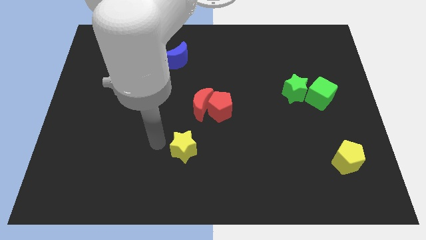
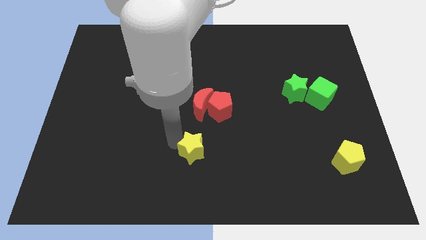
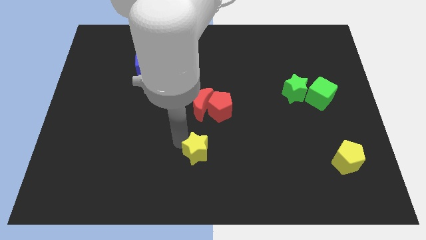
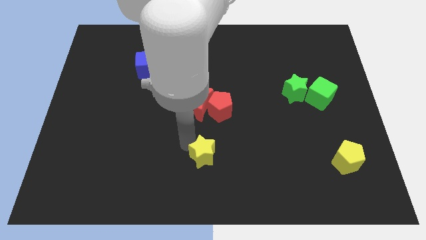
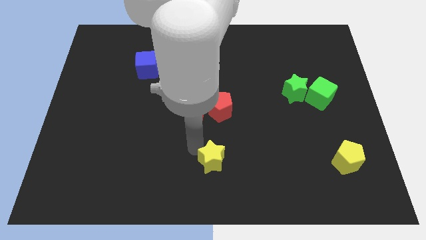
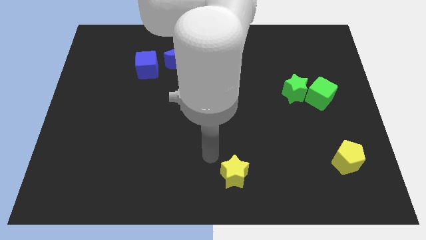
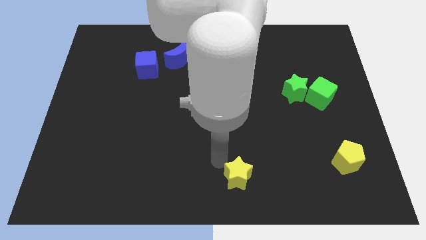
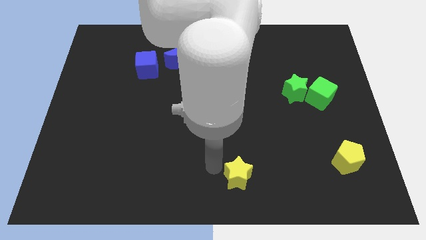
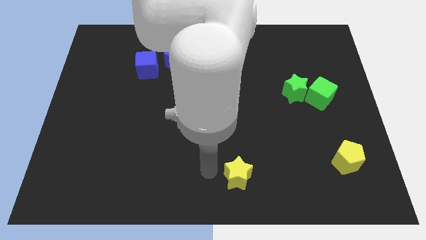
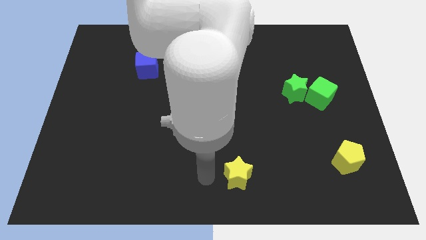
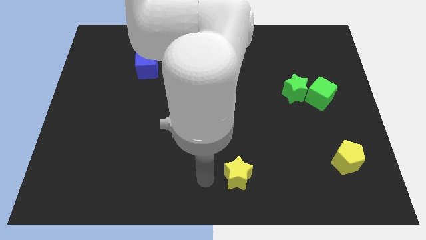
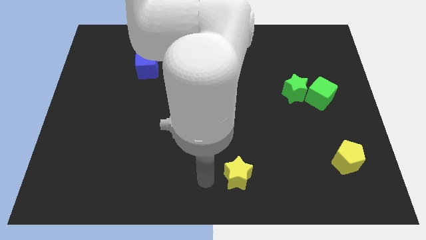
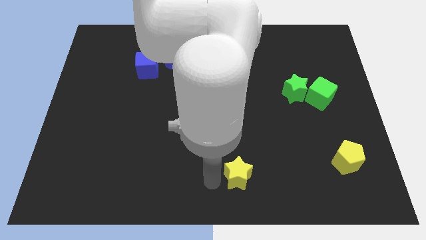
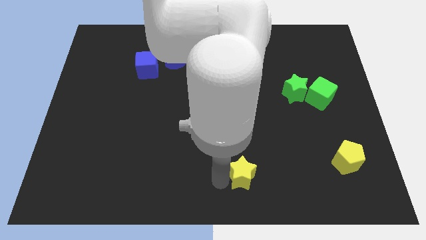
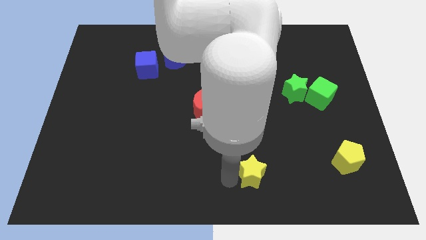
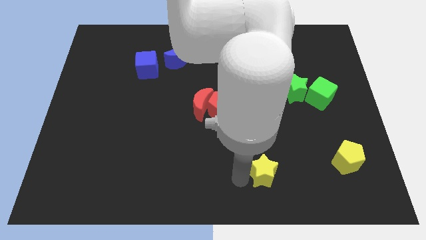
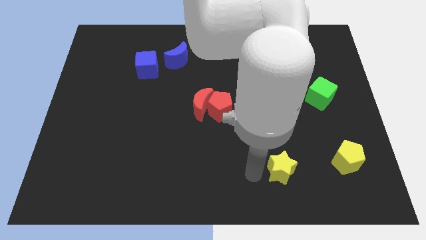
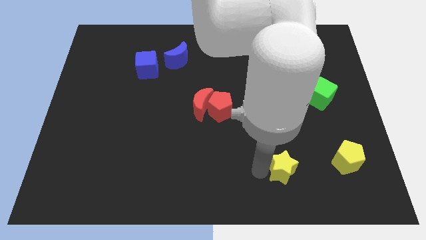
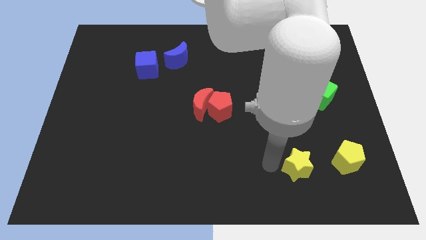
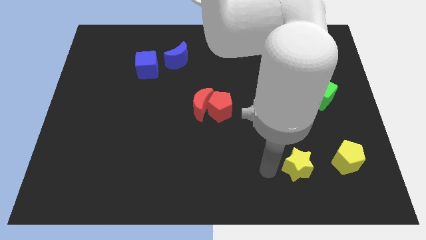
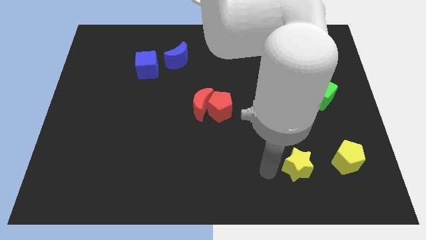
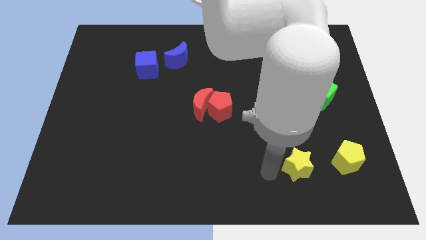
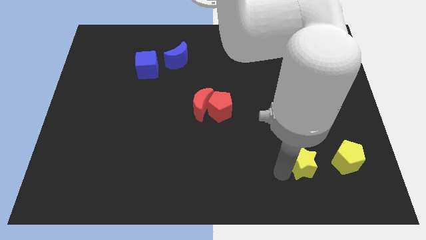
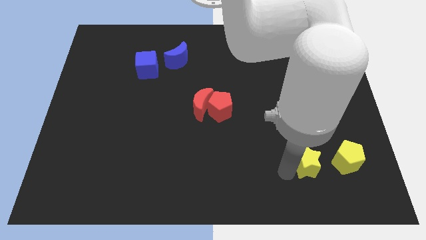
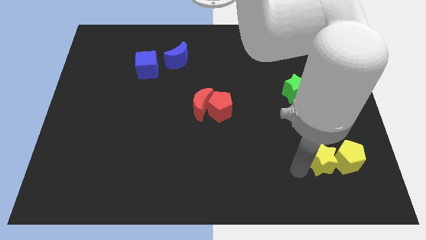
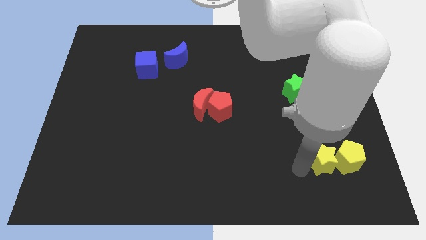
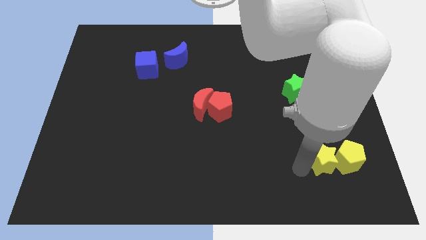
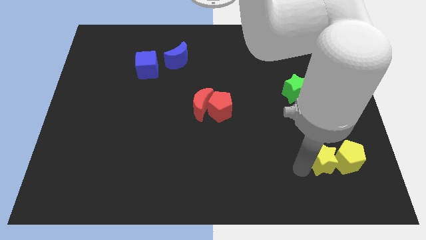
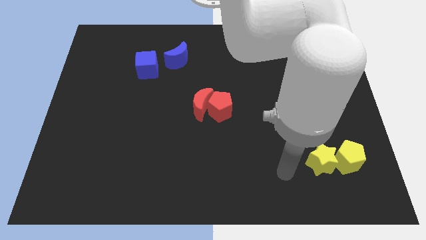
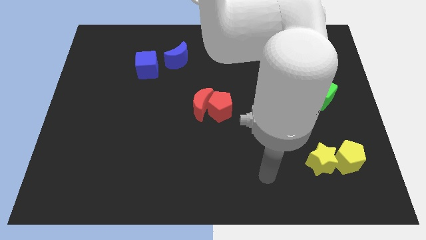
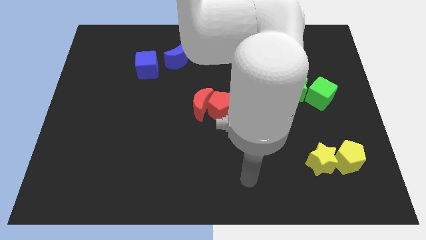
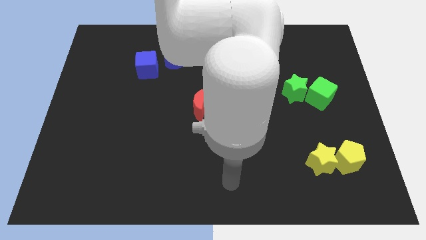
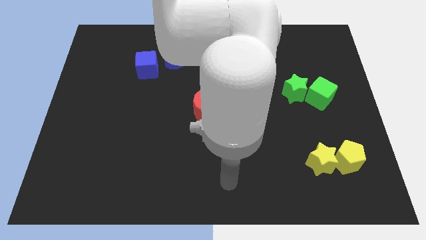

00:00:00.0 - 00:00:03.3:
place yellow star to the left of yellow pentagon

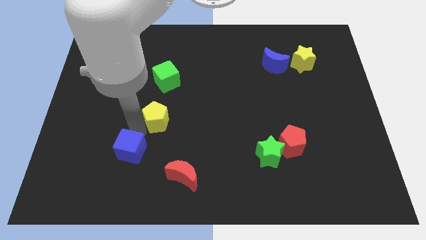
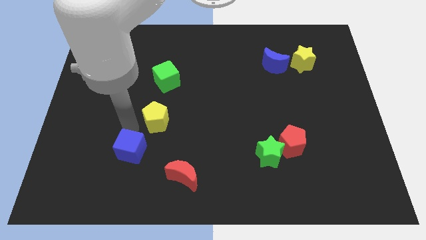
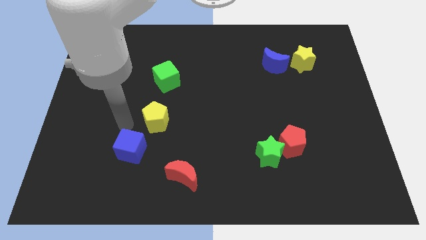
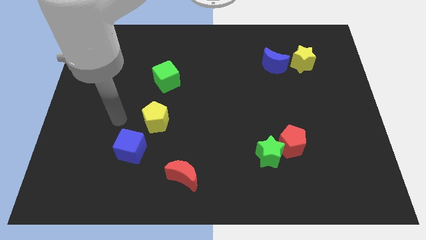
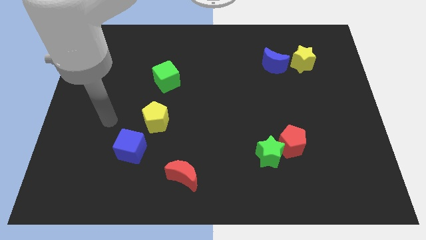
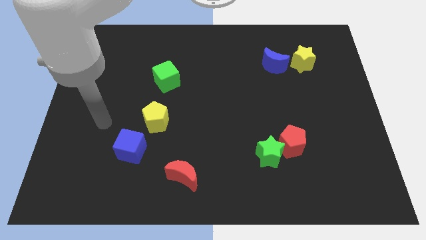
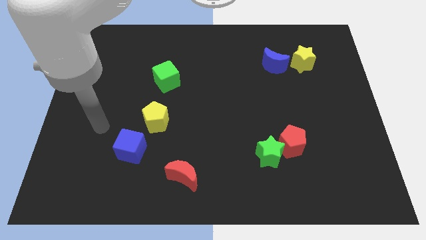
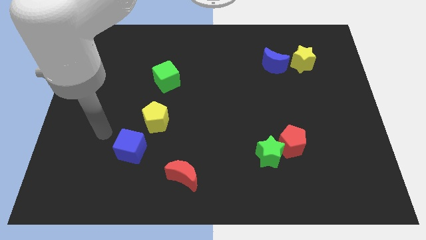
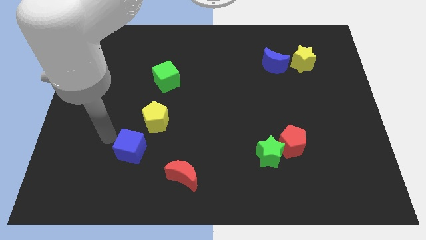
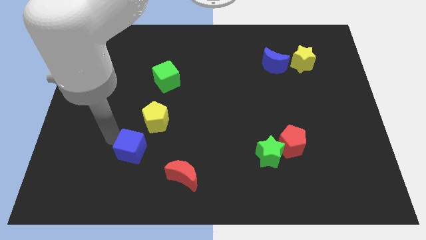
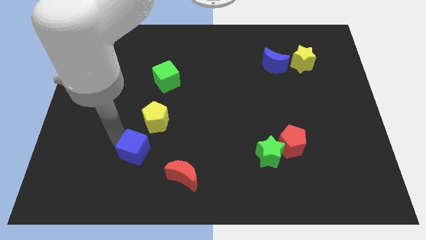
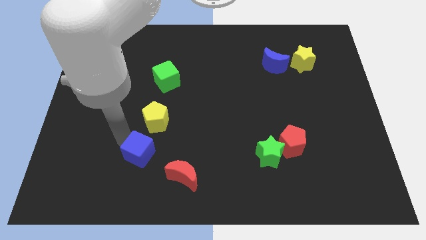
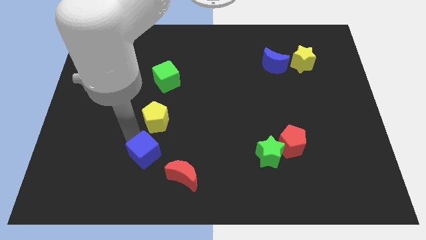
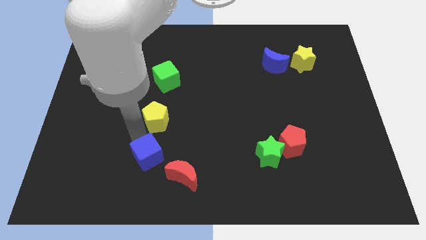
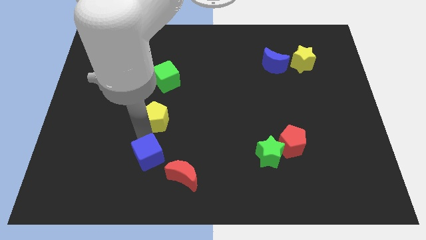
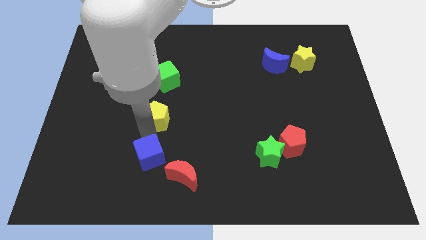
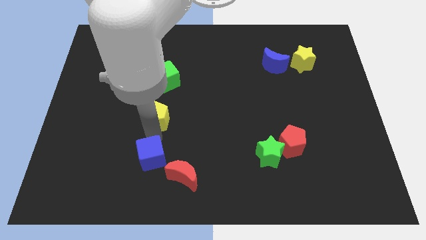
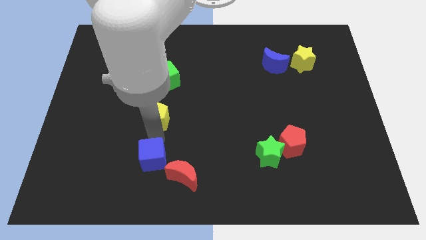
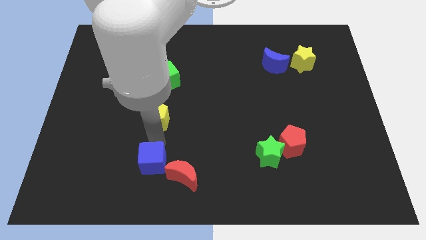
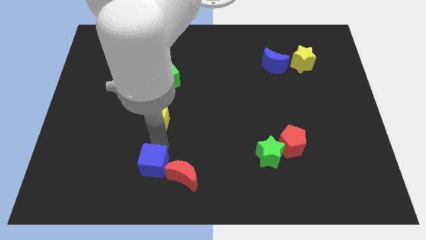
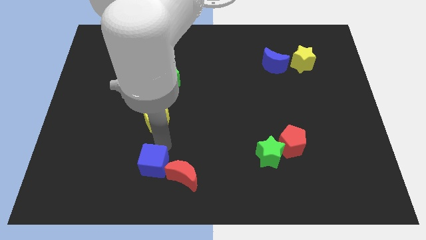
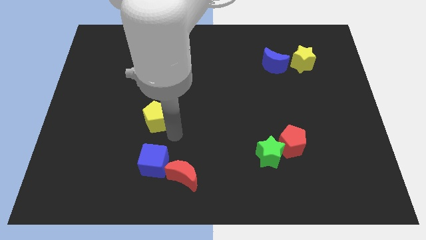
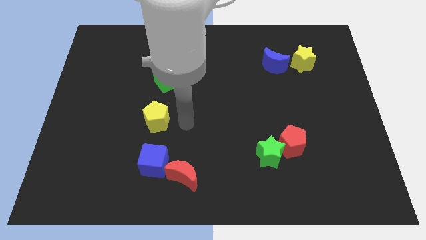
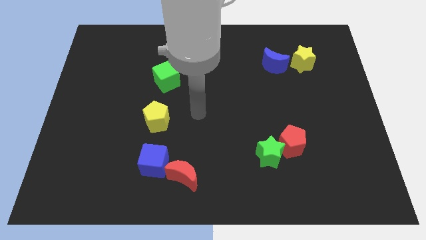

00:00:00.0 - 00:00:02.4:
move blue cube left beside the red moon

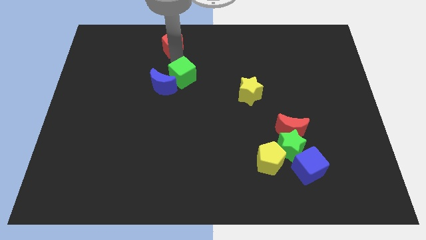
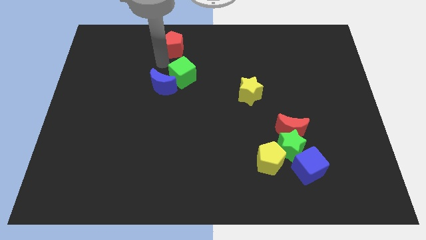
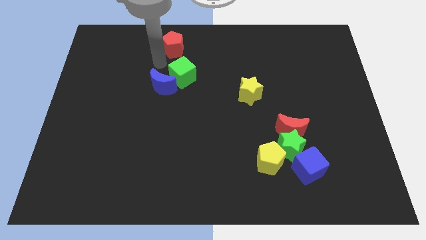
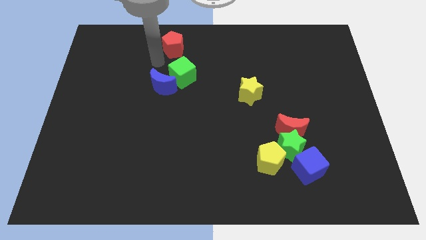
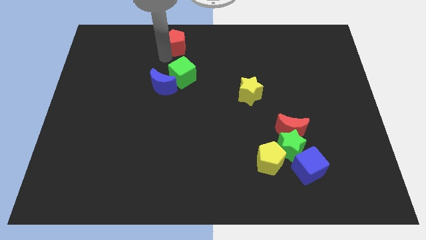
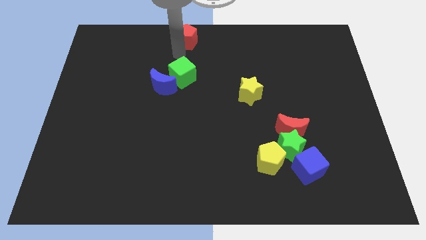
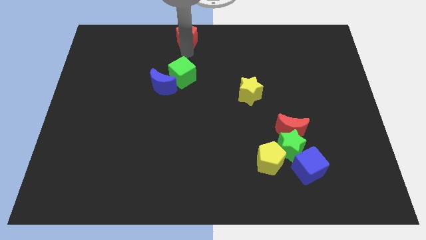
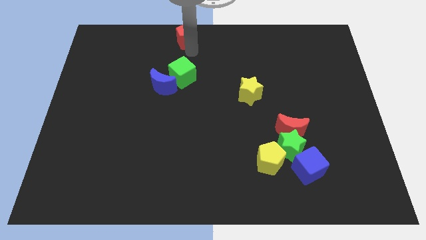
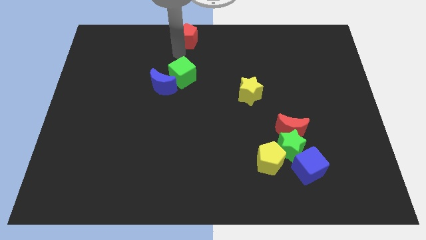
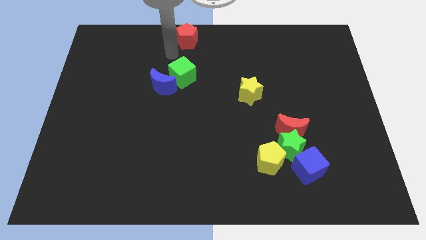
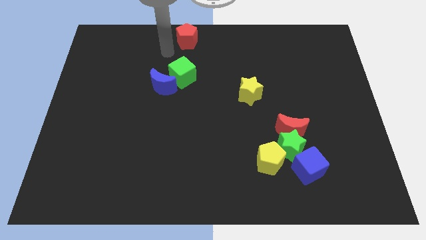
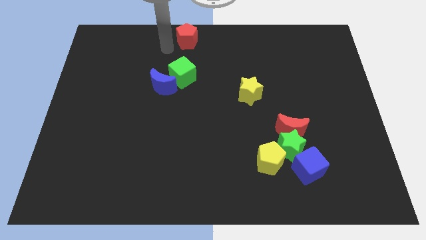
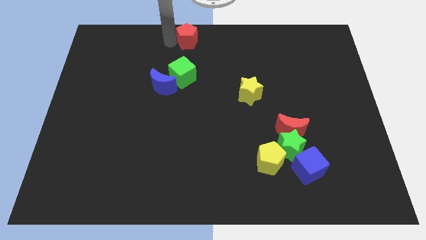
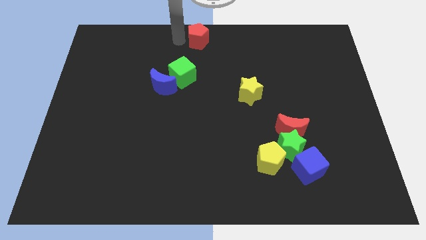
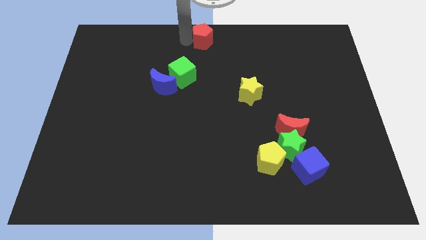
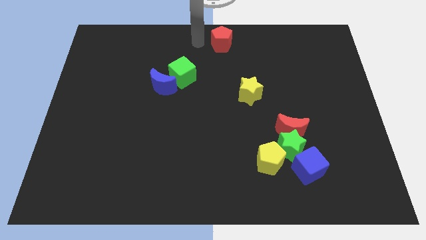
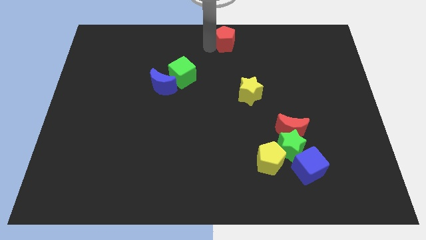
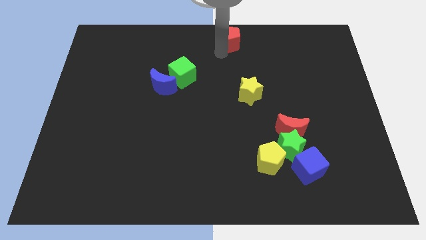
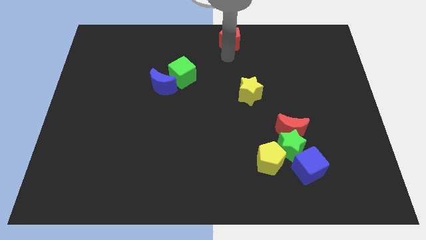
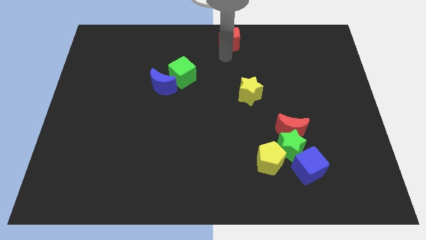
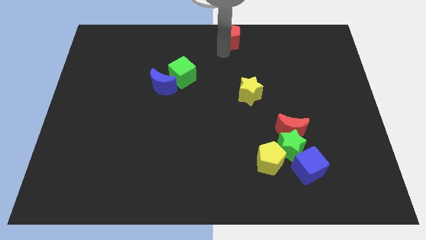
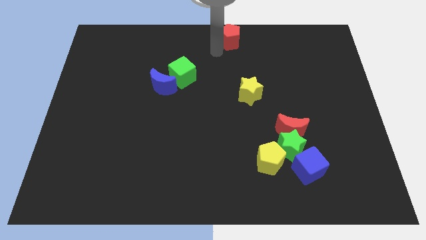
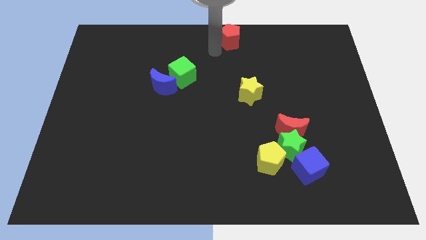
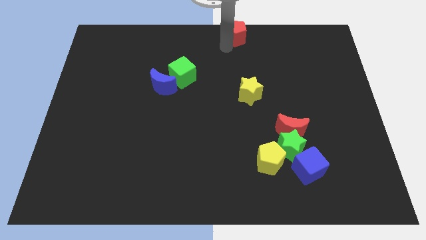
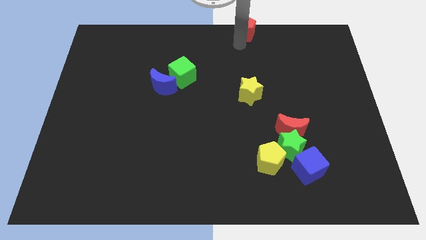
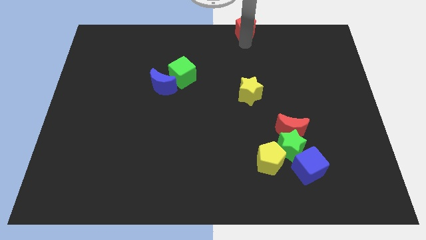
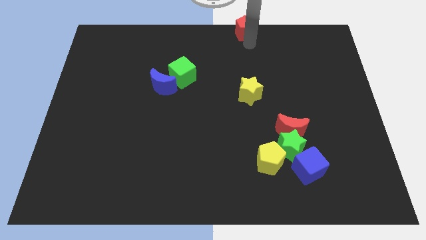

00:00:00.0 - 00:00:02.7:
move red pentagon above yellow star vertically

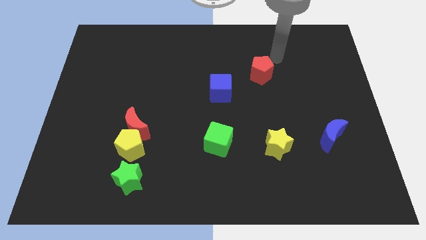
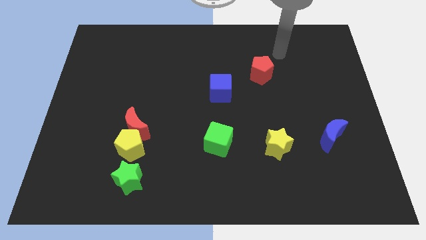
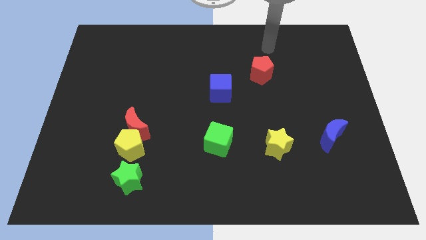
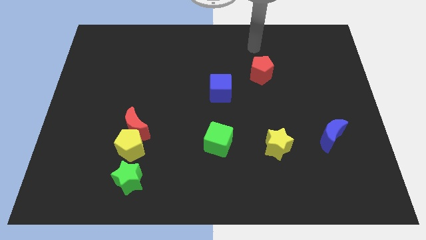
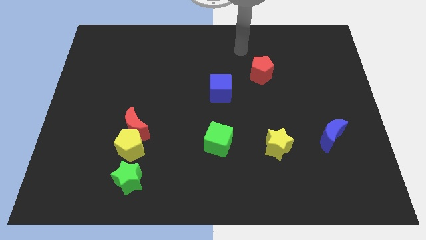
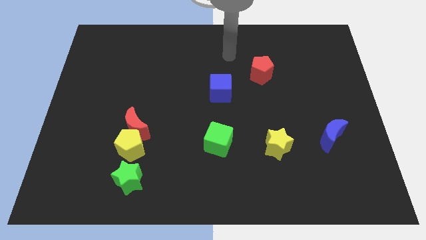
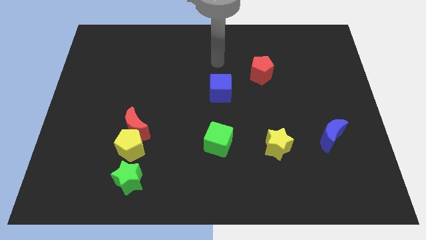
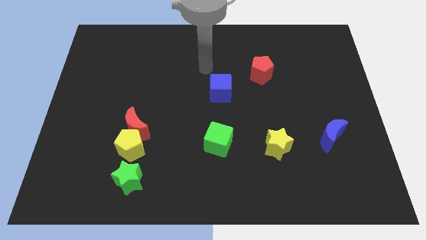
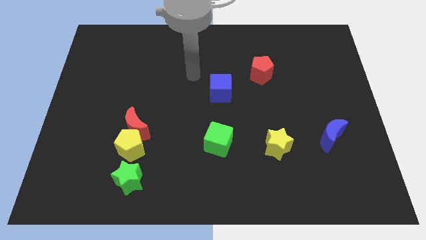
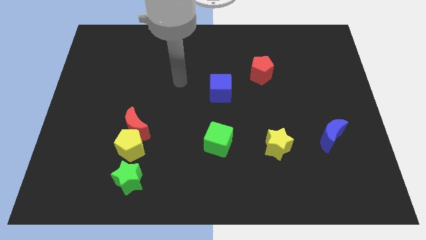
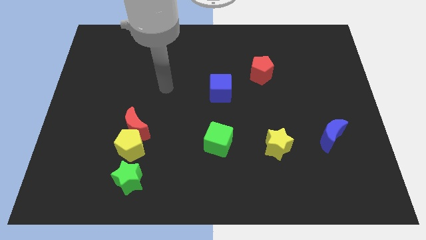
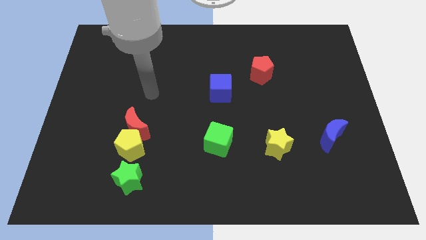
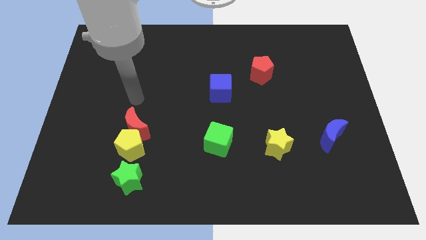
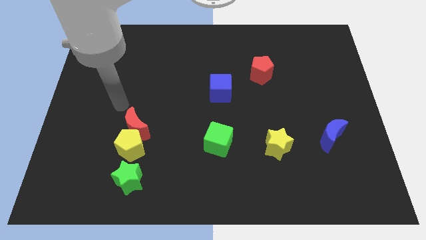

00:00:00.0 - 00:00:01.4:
place your hand above the red pentagon
